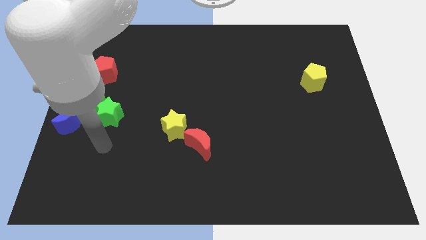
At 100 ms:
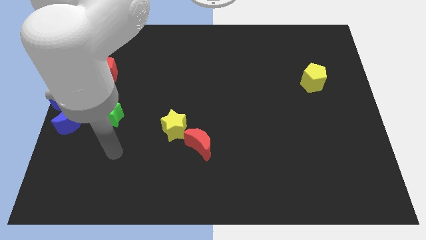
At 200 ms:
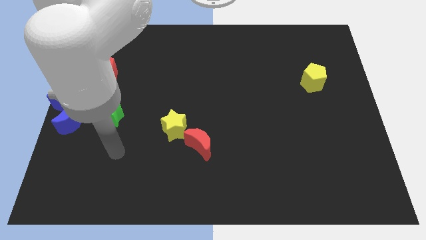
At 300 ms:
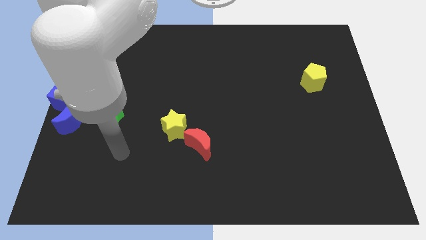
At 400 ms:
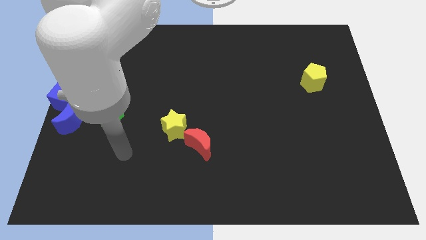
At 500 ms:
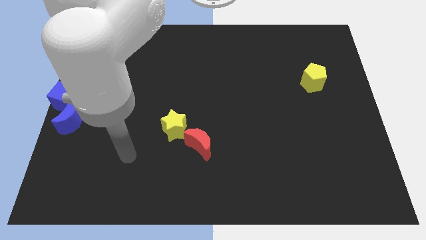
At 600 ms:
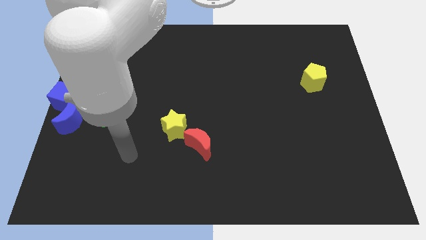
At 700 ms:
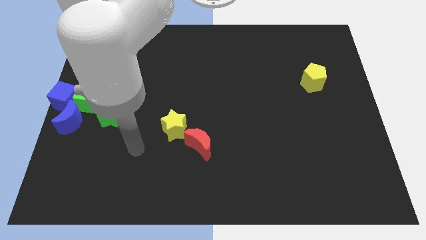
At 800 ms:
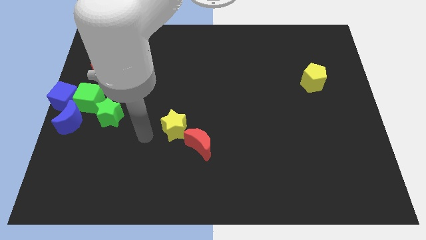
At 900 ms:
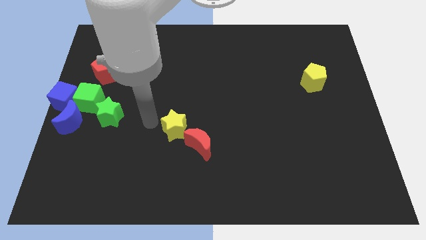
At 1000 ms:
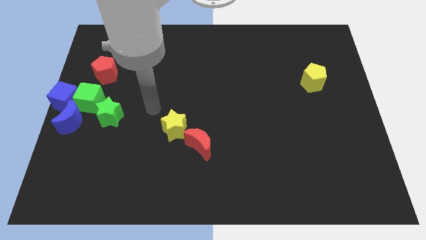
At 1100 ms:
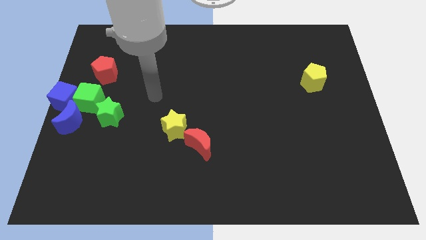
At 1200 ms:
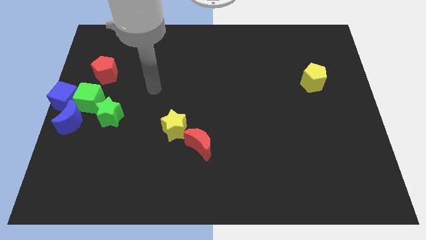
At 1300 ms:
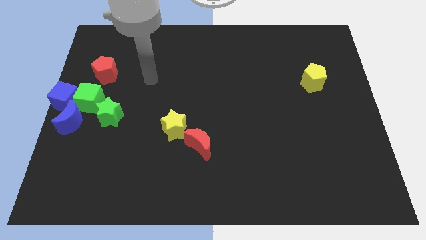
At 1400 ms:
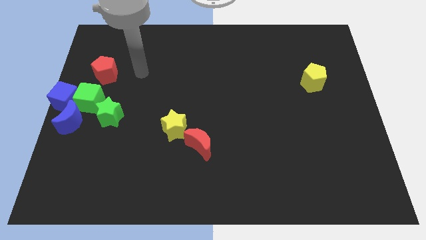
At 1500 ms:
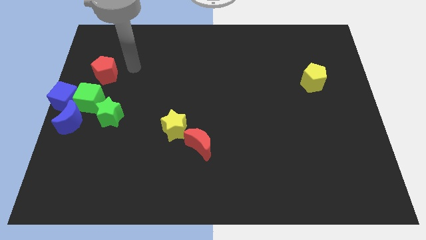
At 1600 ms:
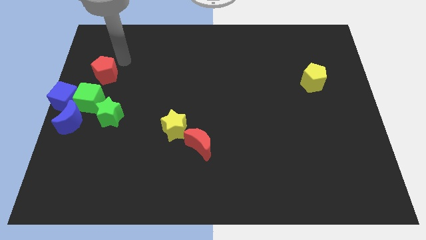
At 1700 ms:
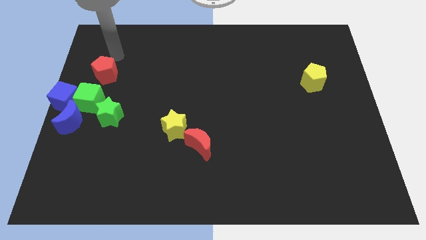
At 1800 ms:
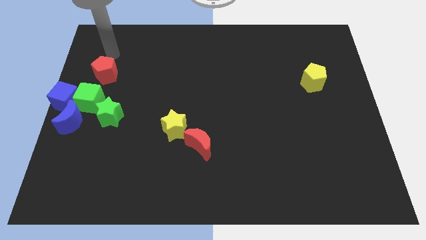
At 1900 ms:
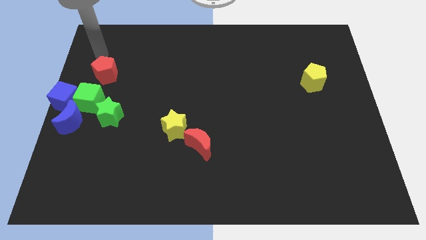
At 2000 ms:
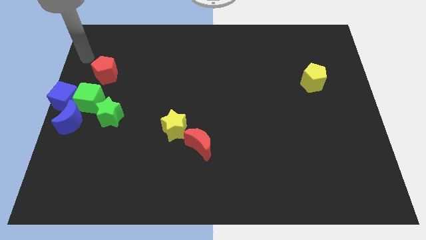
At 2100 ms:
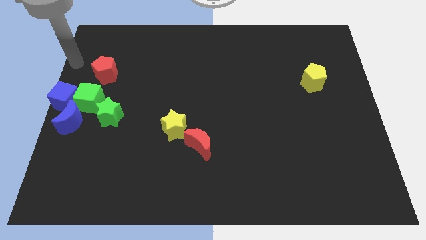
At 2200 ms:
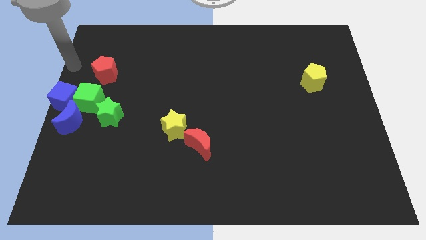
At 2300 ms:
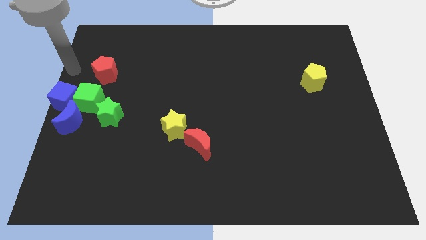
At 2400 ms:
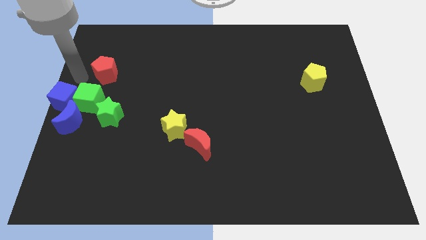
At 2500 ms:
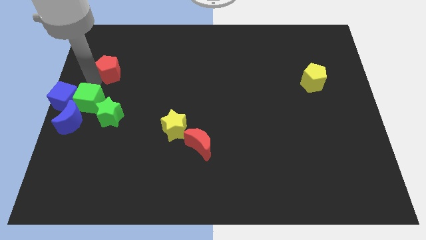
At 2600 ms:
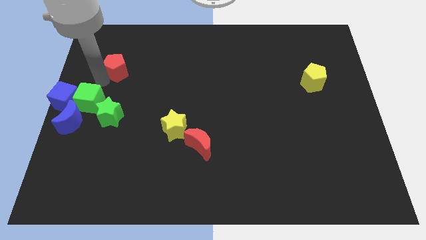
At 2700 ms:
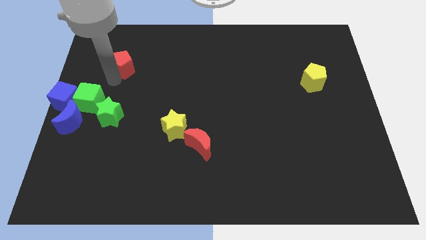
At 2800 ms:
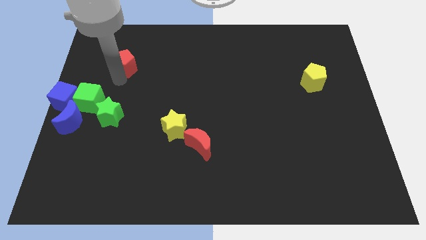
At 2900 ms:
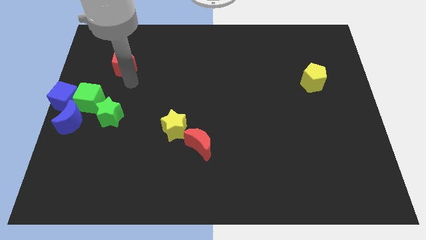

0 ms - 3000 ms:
put your arm to the bottom right of the red pentagon

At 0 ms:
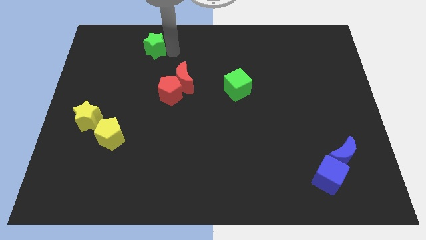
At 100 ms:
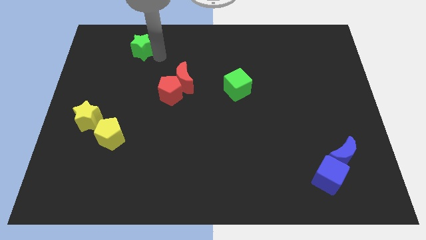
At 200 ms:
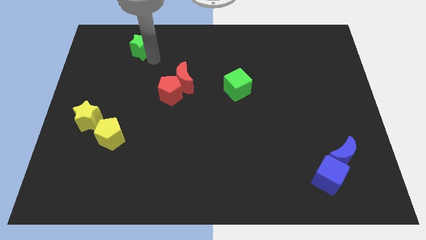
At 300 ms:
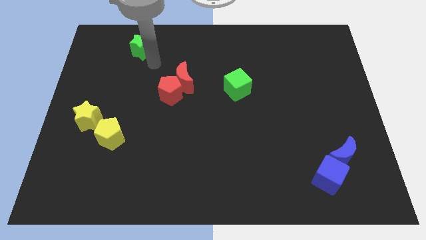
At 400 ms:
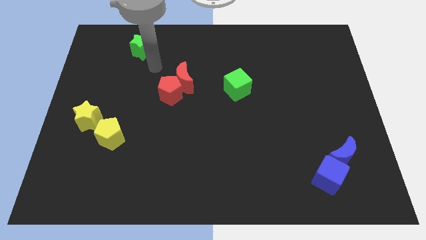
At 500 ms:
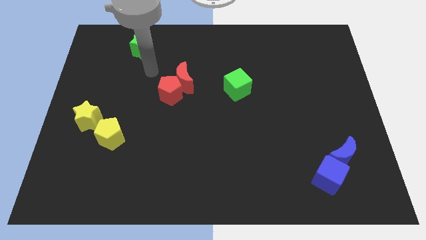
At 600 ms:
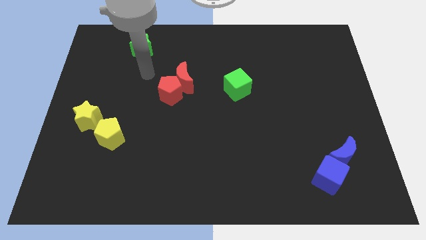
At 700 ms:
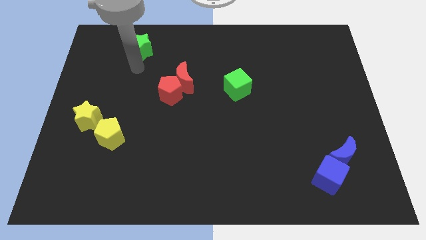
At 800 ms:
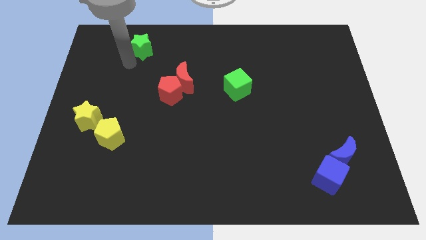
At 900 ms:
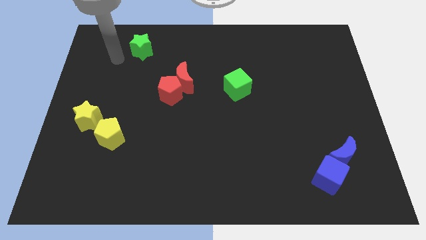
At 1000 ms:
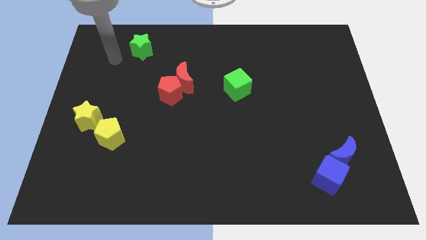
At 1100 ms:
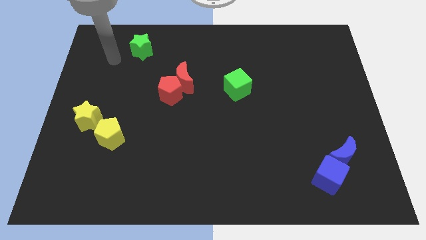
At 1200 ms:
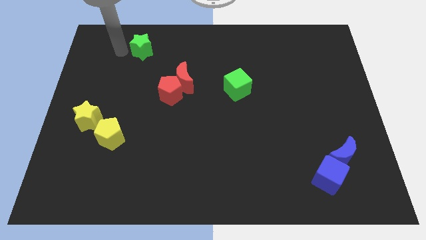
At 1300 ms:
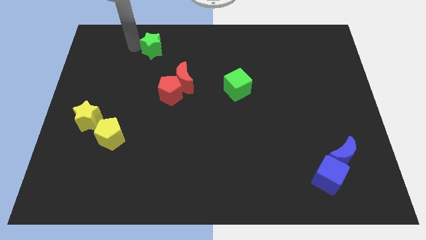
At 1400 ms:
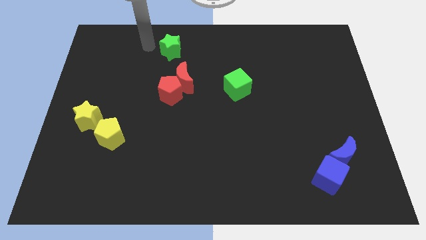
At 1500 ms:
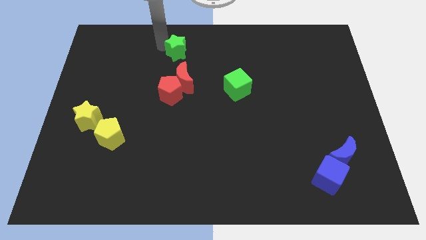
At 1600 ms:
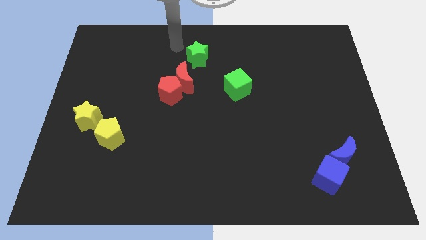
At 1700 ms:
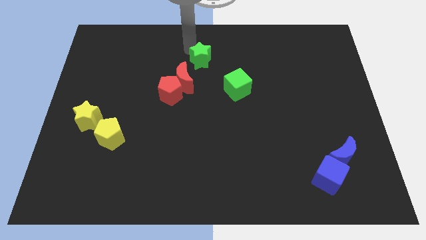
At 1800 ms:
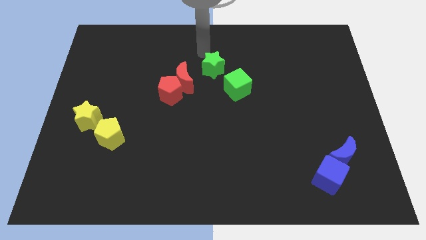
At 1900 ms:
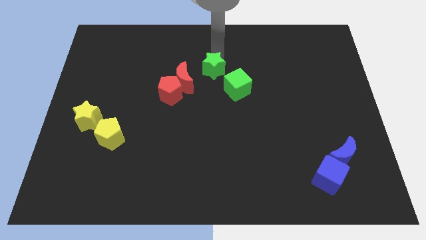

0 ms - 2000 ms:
push the green star towards the top side of the green cube

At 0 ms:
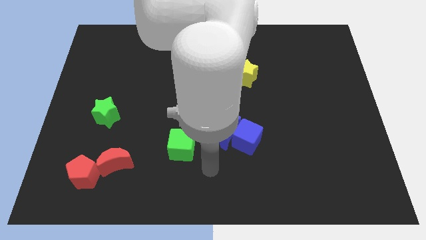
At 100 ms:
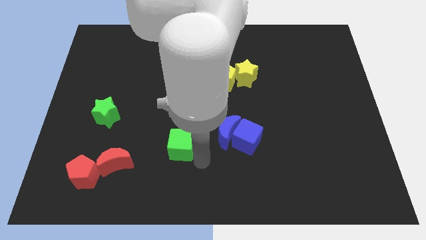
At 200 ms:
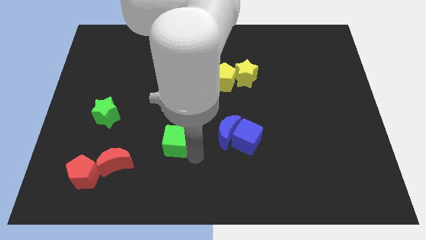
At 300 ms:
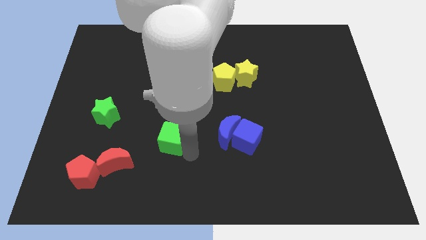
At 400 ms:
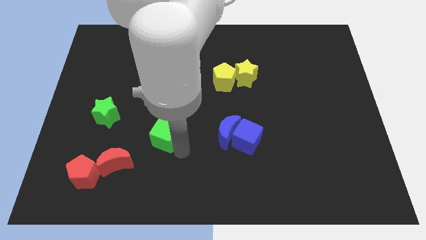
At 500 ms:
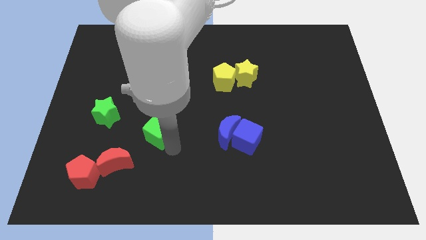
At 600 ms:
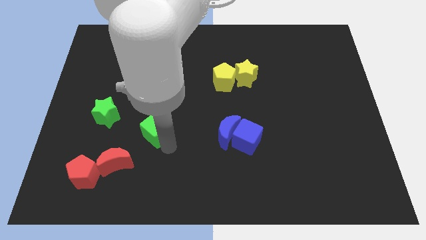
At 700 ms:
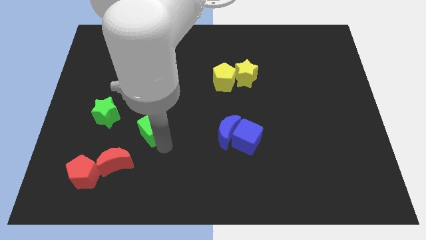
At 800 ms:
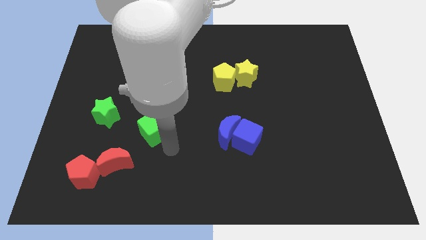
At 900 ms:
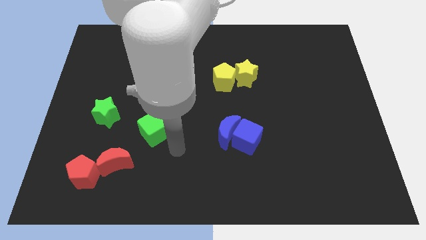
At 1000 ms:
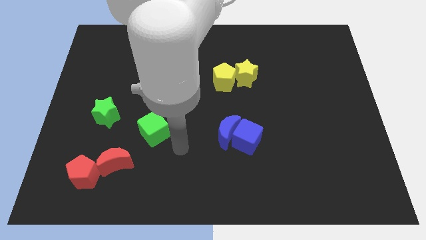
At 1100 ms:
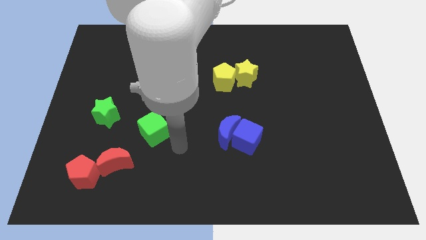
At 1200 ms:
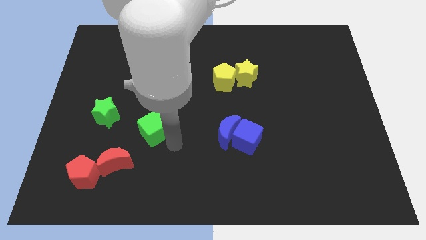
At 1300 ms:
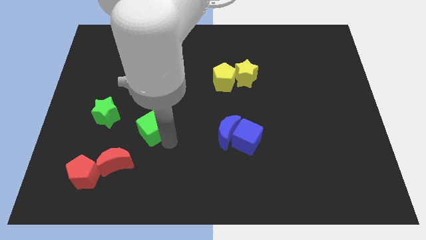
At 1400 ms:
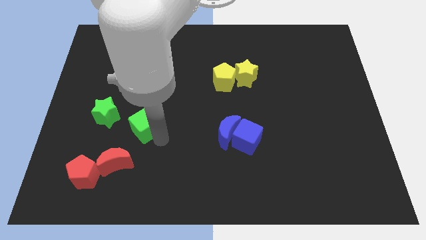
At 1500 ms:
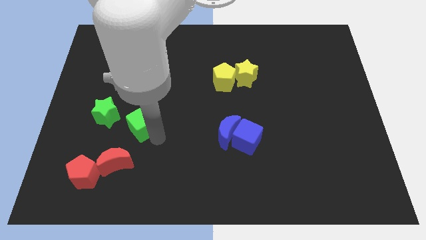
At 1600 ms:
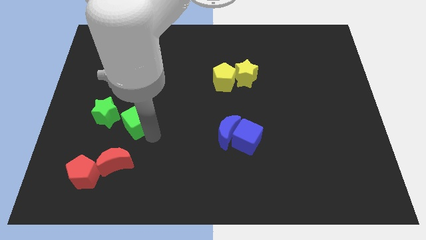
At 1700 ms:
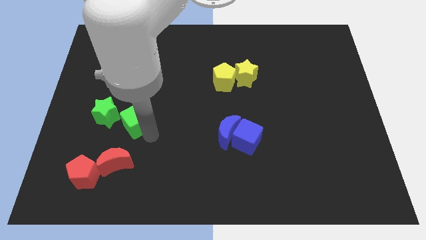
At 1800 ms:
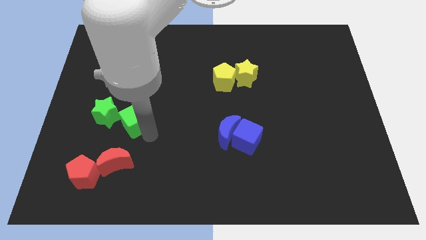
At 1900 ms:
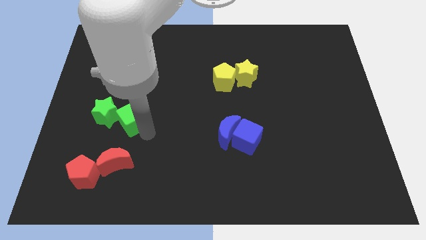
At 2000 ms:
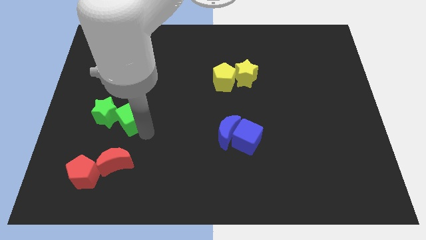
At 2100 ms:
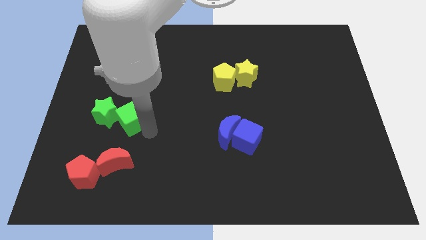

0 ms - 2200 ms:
place the green cube into green star to the right

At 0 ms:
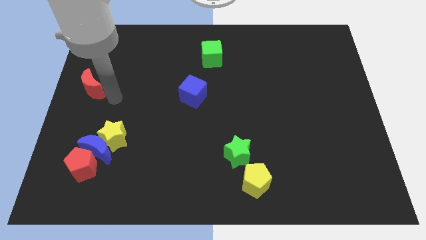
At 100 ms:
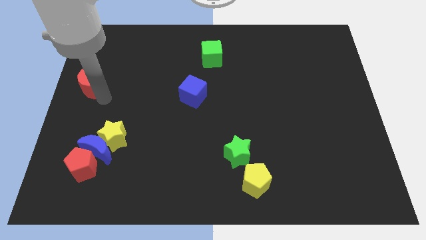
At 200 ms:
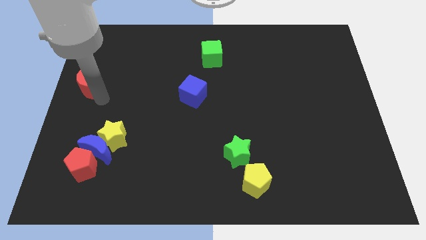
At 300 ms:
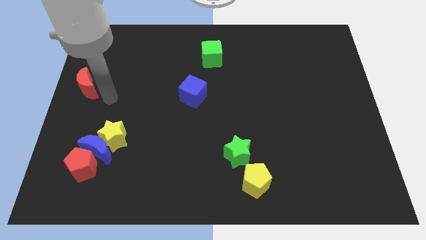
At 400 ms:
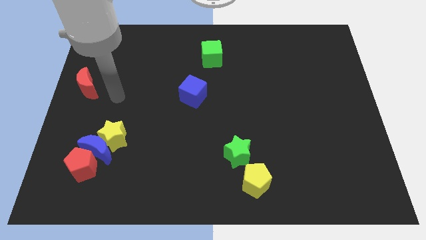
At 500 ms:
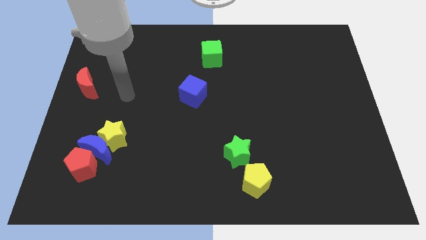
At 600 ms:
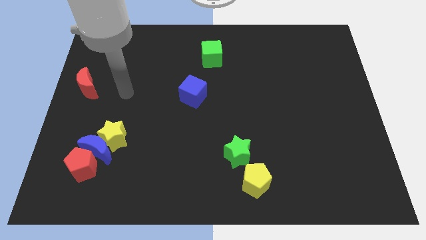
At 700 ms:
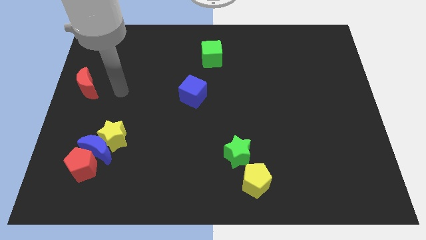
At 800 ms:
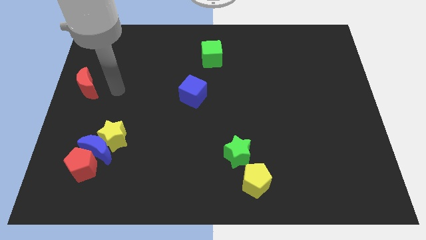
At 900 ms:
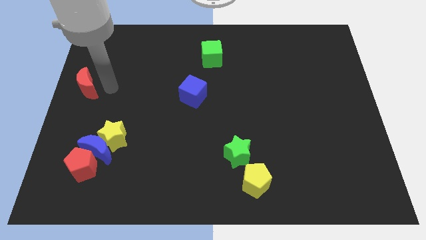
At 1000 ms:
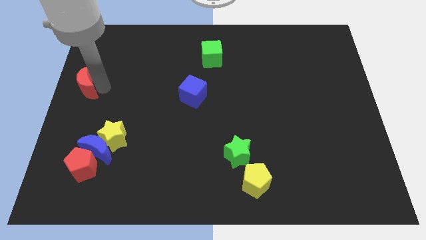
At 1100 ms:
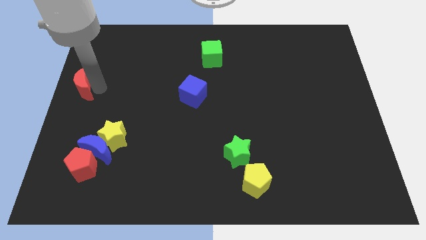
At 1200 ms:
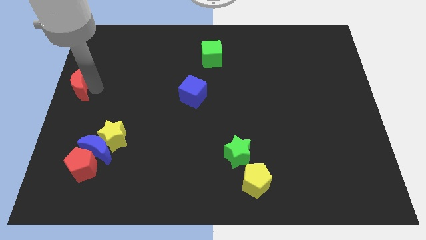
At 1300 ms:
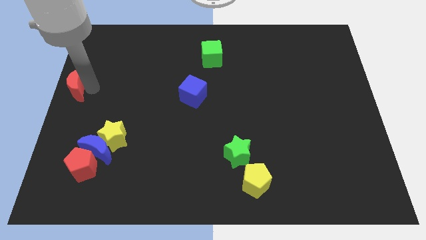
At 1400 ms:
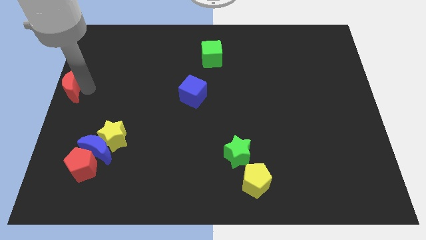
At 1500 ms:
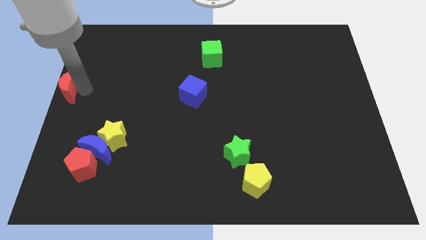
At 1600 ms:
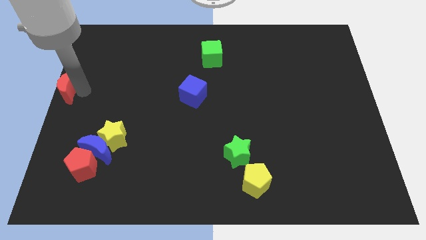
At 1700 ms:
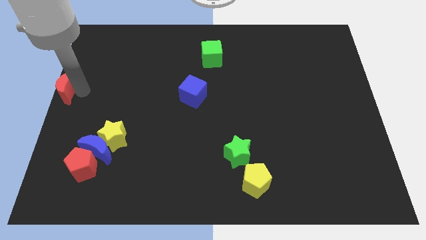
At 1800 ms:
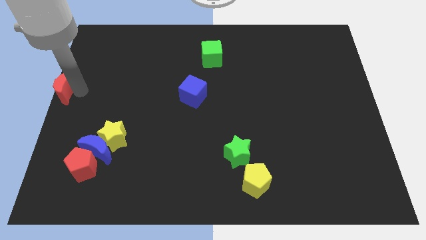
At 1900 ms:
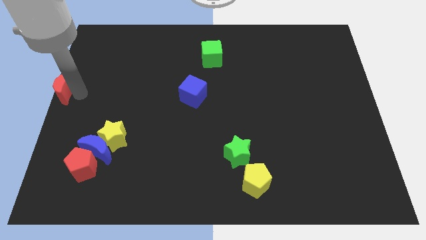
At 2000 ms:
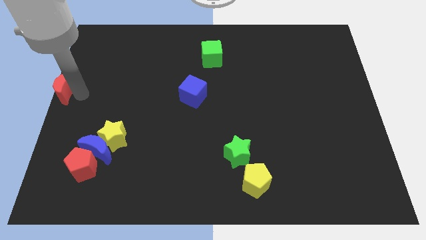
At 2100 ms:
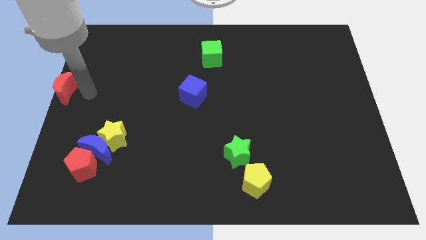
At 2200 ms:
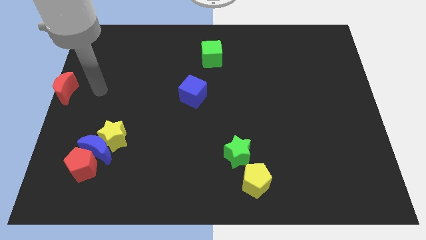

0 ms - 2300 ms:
place red crescent towards left end
